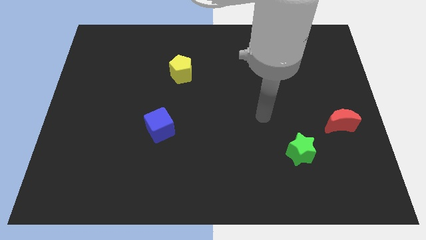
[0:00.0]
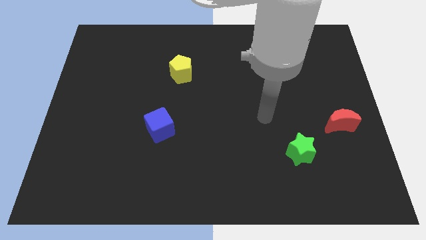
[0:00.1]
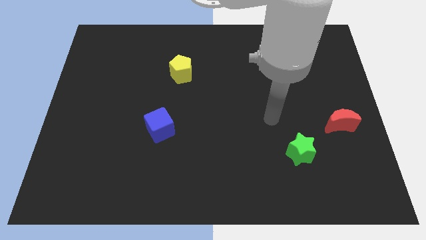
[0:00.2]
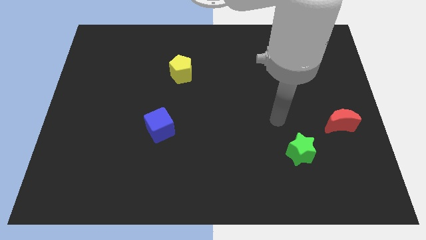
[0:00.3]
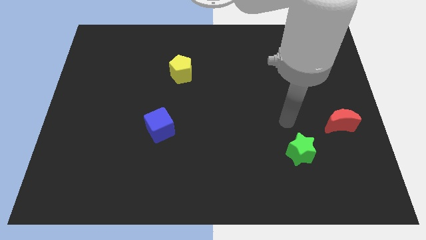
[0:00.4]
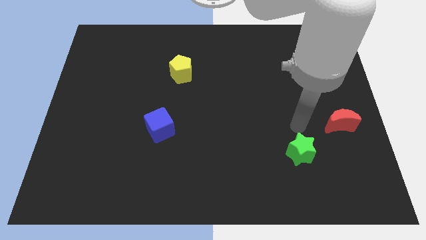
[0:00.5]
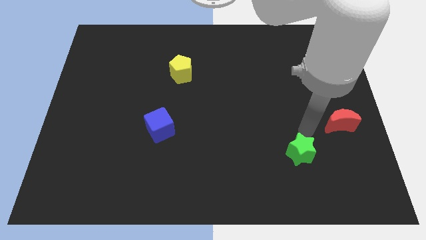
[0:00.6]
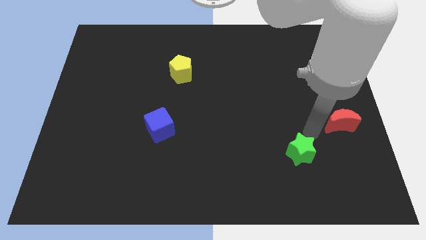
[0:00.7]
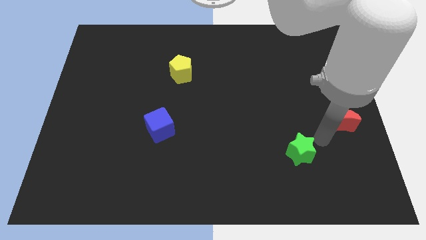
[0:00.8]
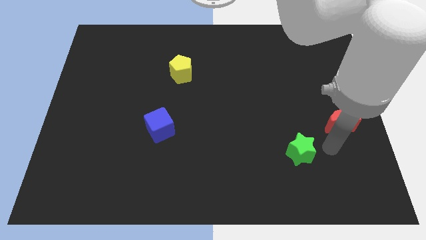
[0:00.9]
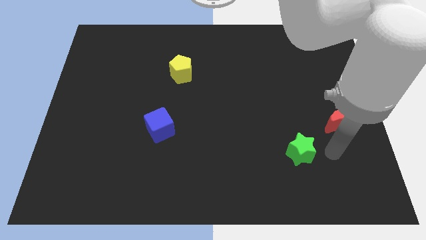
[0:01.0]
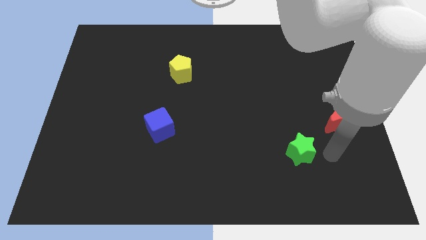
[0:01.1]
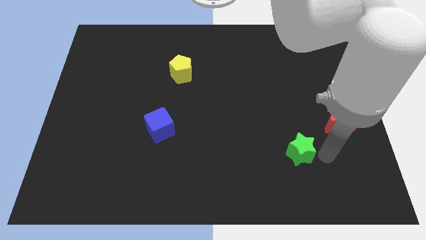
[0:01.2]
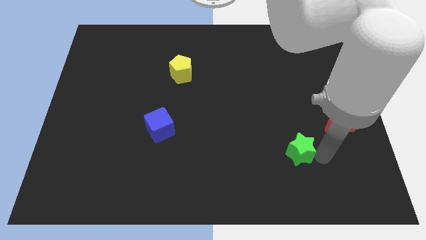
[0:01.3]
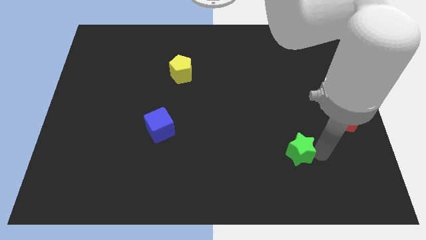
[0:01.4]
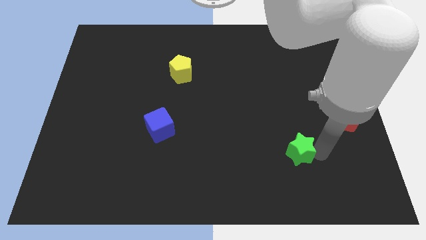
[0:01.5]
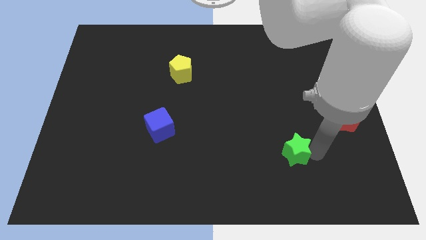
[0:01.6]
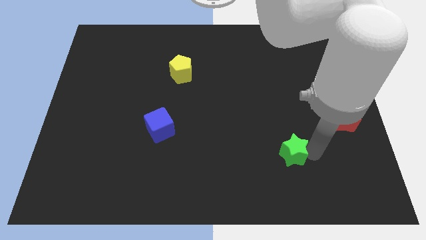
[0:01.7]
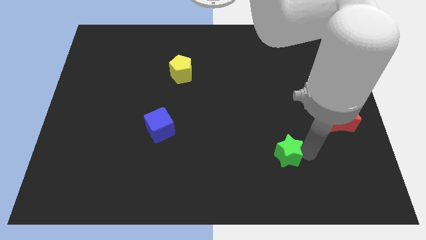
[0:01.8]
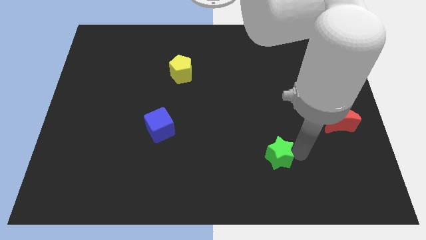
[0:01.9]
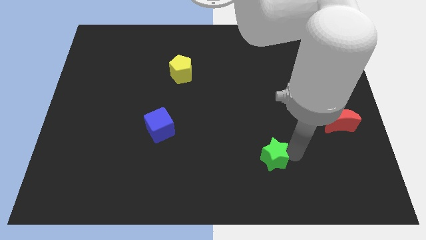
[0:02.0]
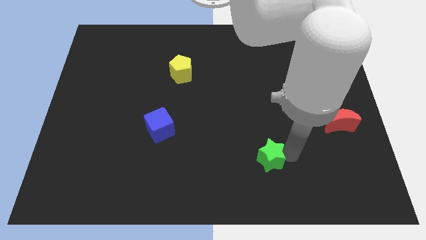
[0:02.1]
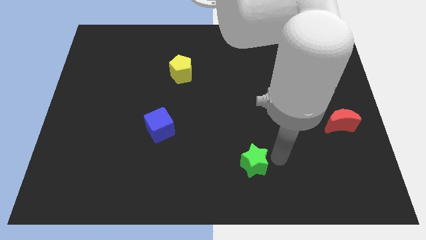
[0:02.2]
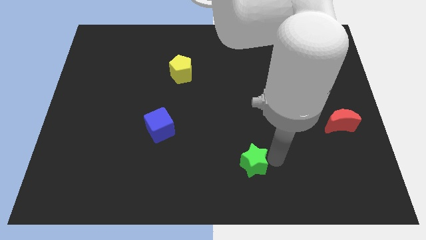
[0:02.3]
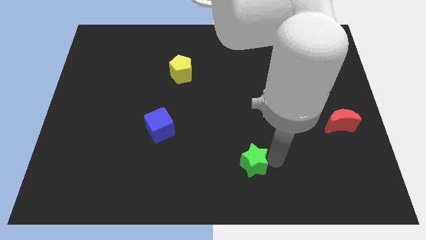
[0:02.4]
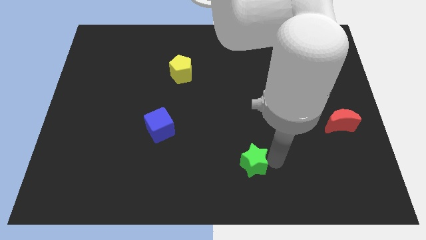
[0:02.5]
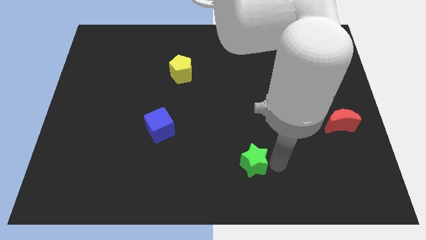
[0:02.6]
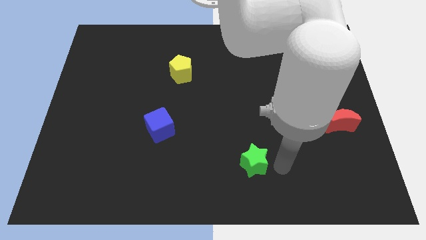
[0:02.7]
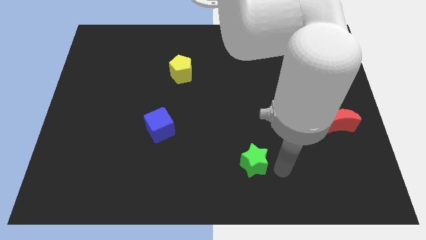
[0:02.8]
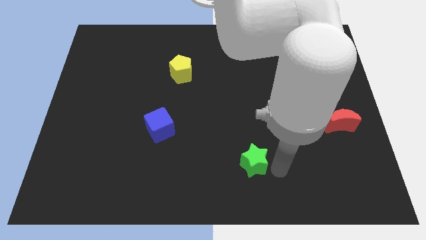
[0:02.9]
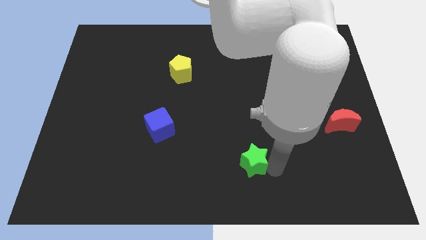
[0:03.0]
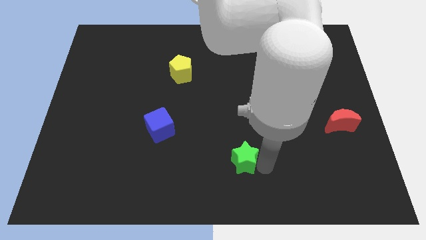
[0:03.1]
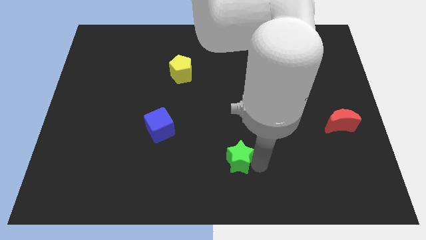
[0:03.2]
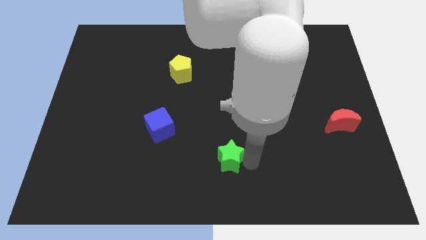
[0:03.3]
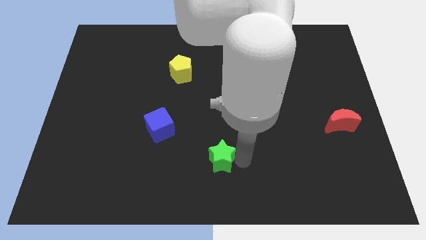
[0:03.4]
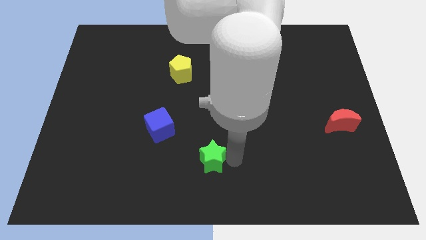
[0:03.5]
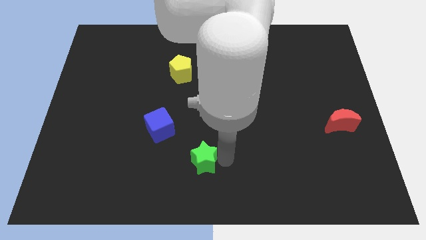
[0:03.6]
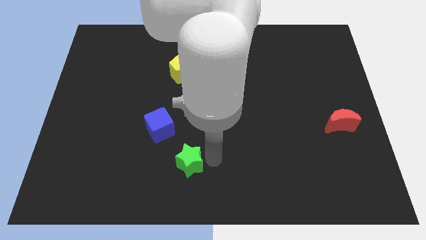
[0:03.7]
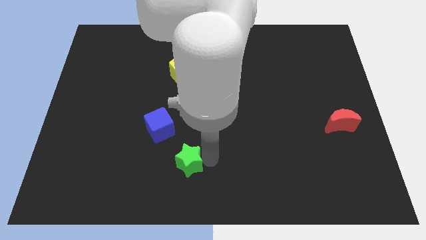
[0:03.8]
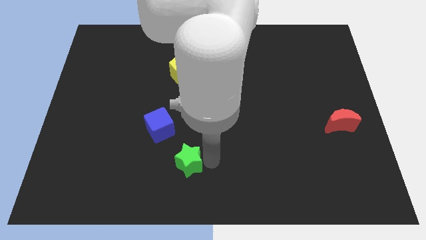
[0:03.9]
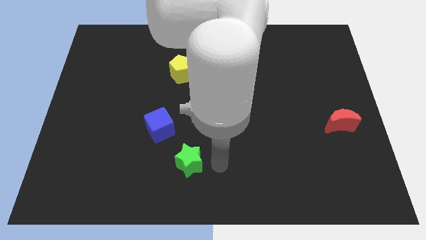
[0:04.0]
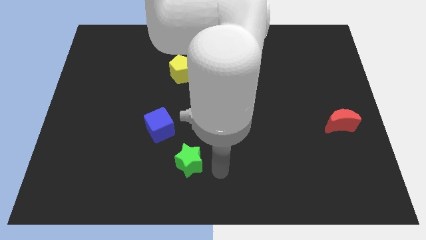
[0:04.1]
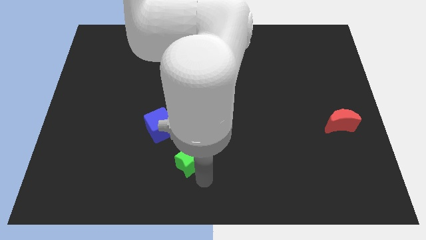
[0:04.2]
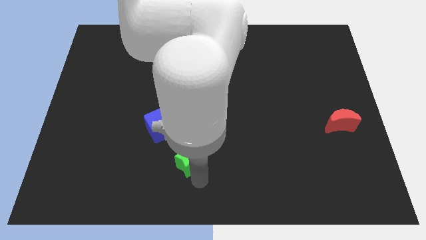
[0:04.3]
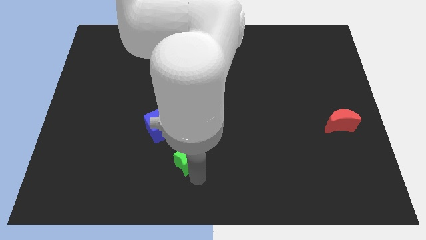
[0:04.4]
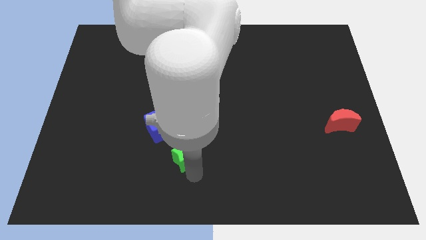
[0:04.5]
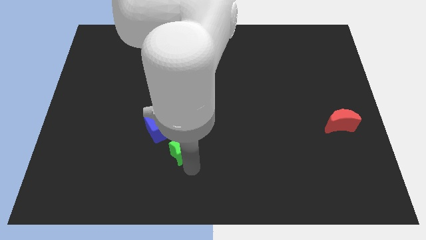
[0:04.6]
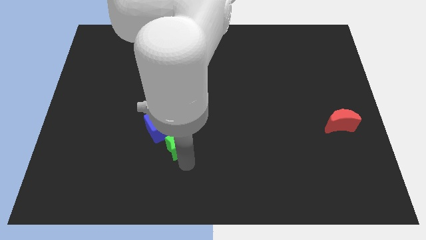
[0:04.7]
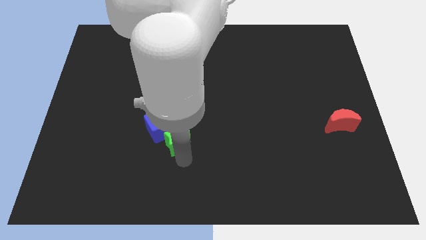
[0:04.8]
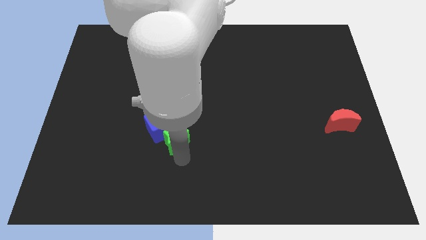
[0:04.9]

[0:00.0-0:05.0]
move the star close to the blue cube

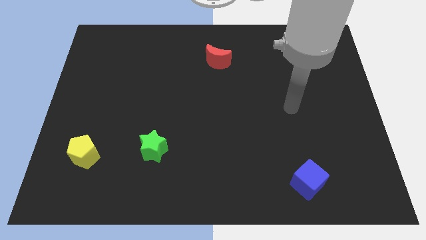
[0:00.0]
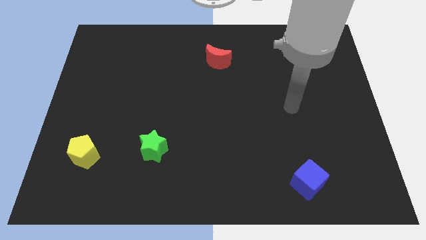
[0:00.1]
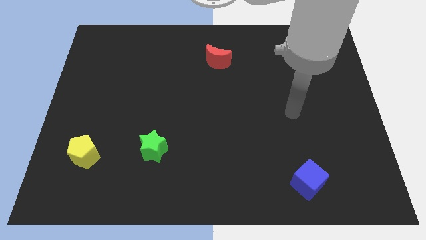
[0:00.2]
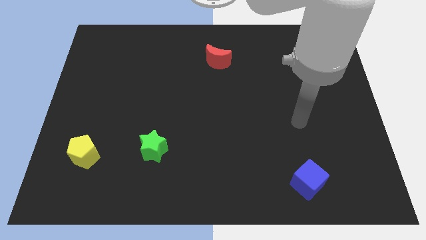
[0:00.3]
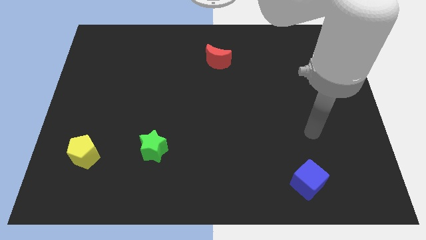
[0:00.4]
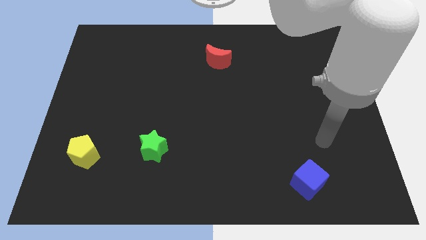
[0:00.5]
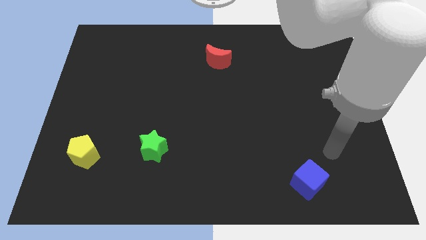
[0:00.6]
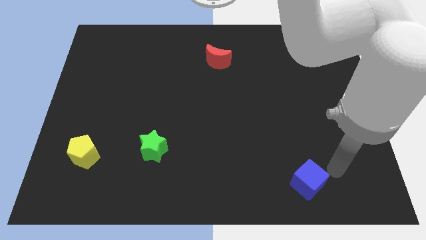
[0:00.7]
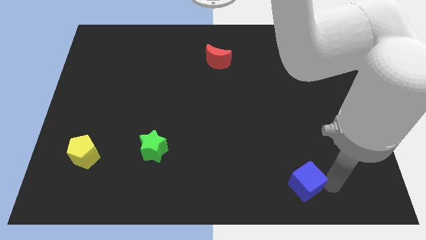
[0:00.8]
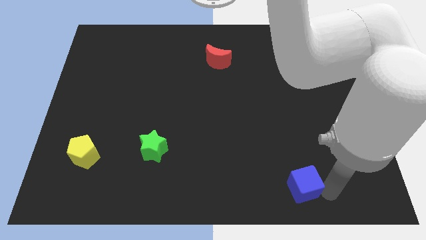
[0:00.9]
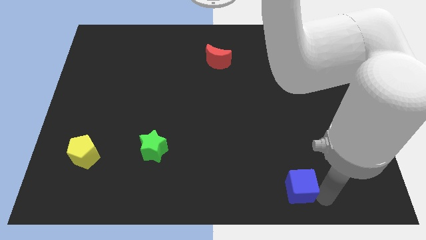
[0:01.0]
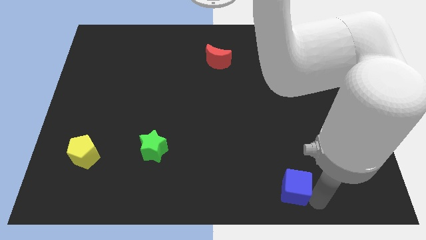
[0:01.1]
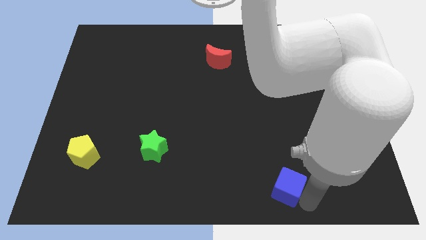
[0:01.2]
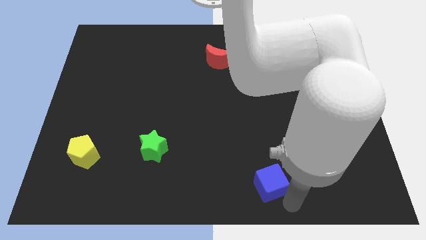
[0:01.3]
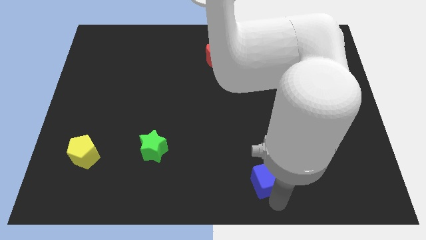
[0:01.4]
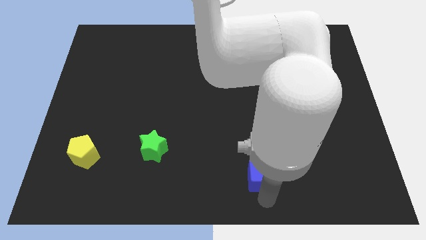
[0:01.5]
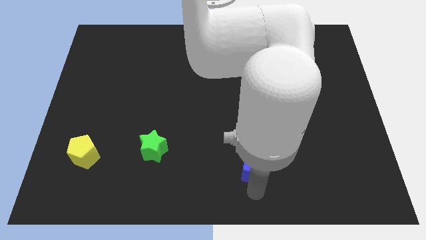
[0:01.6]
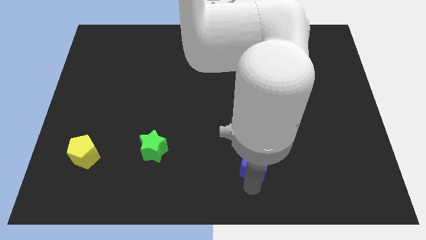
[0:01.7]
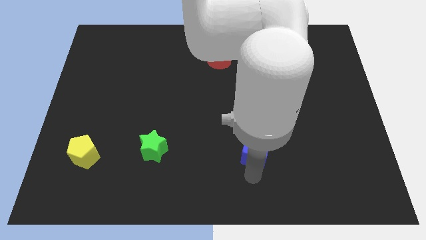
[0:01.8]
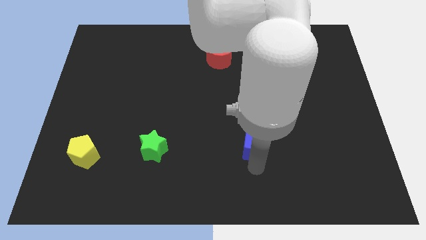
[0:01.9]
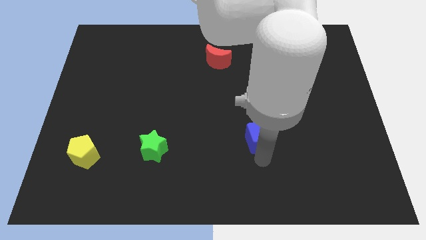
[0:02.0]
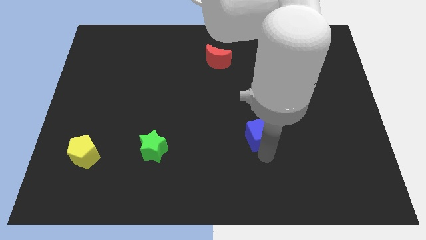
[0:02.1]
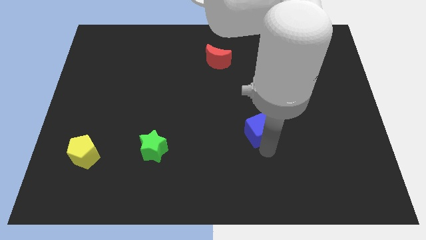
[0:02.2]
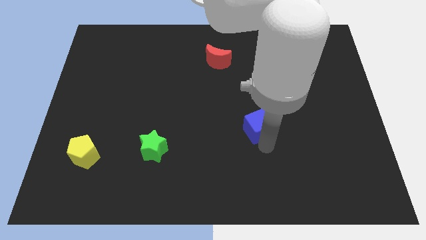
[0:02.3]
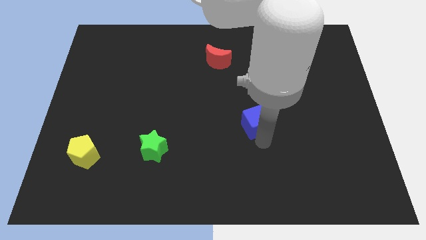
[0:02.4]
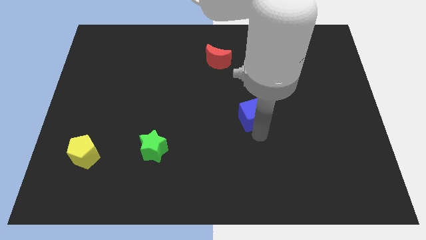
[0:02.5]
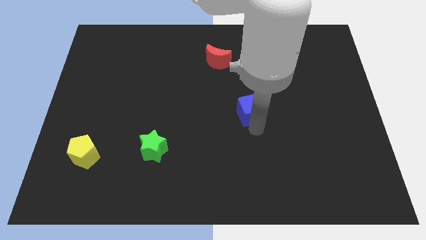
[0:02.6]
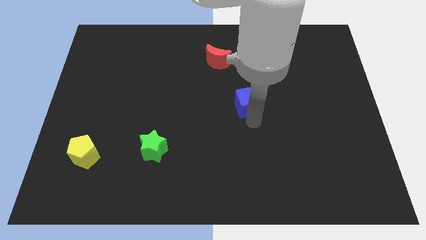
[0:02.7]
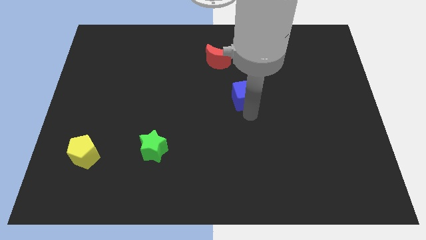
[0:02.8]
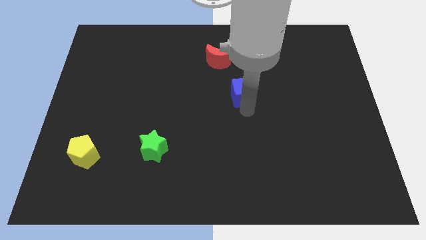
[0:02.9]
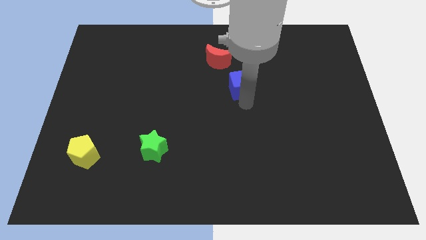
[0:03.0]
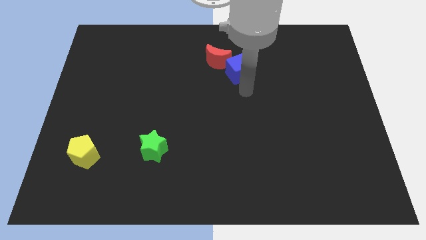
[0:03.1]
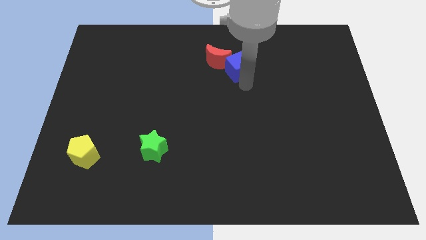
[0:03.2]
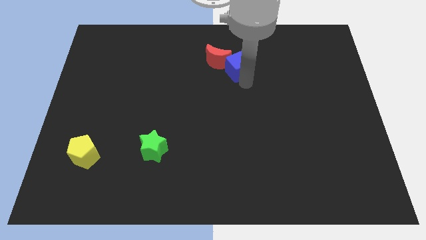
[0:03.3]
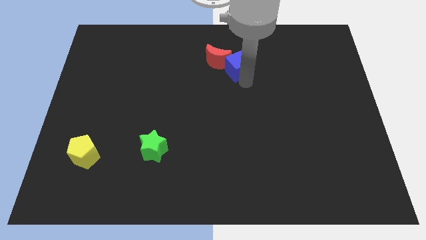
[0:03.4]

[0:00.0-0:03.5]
slide the blue cube towards the red block

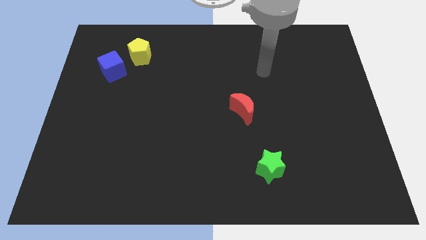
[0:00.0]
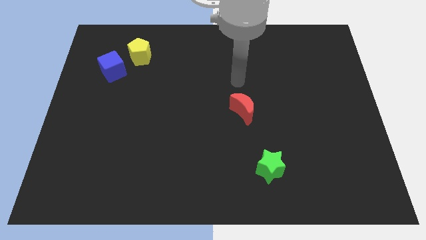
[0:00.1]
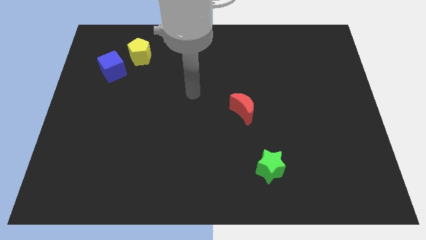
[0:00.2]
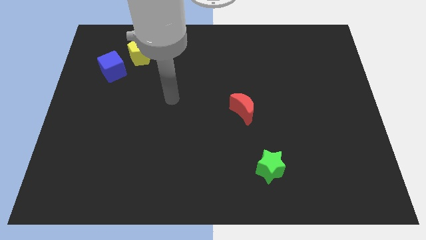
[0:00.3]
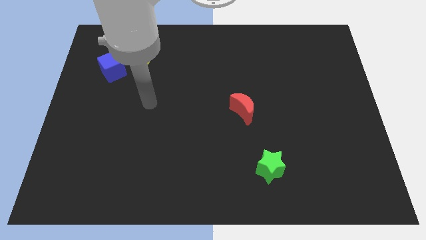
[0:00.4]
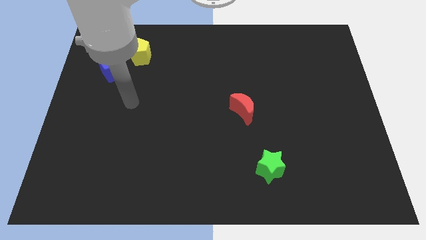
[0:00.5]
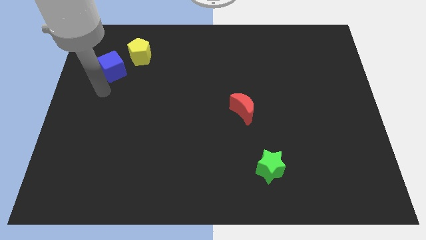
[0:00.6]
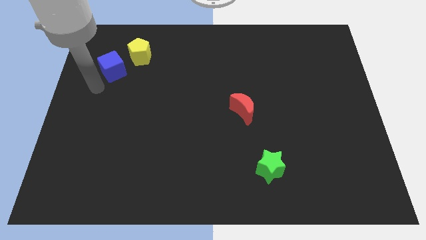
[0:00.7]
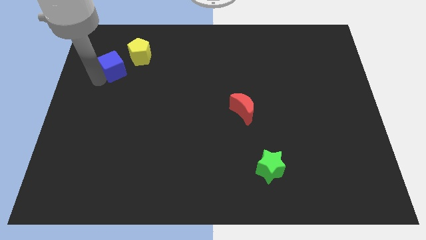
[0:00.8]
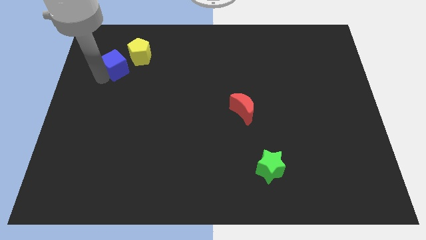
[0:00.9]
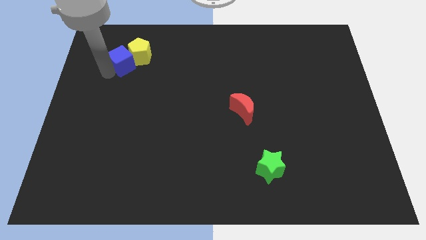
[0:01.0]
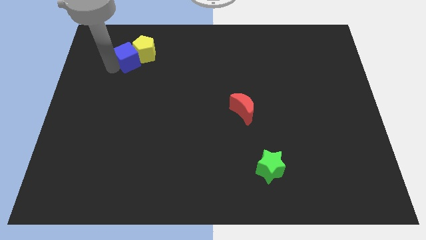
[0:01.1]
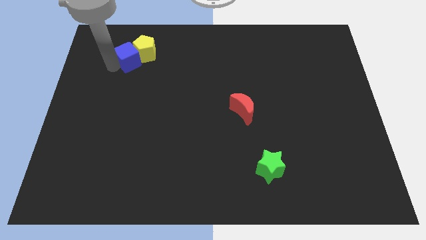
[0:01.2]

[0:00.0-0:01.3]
put the blue block to the yellow pentagon
